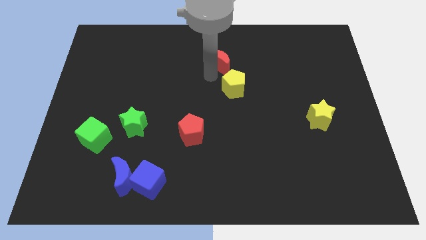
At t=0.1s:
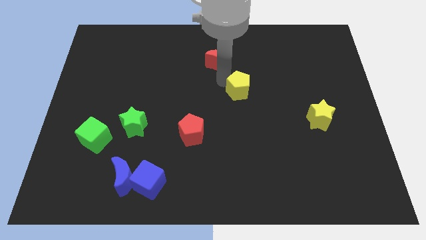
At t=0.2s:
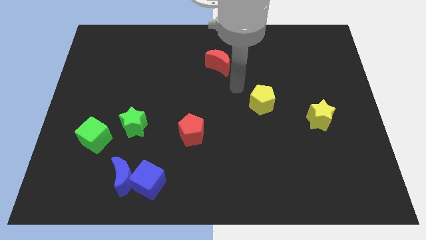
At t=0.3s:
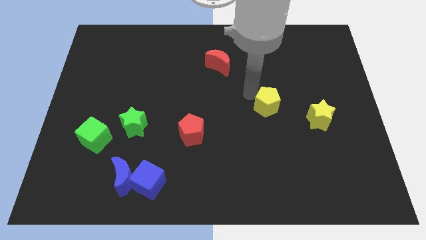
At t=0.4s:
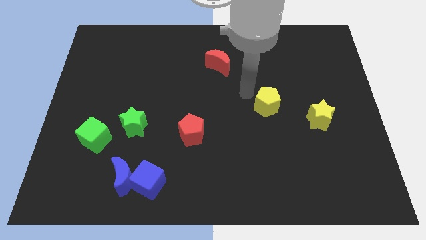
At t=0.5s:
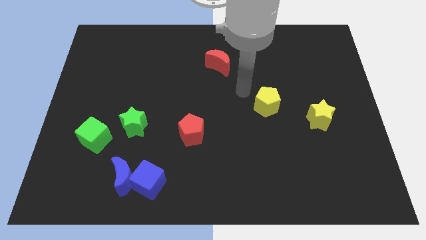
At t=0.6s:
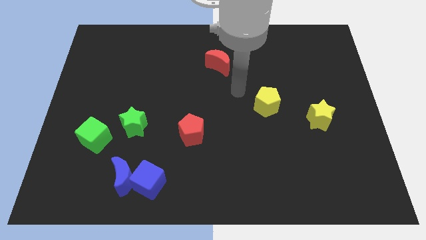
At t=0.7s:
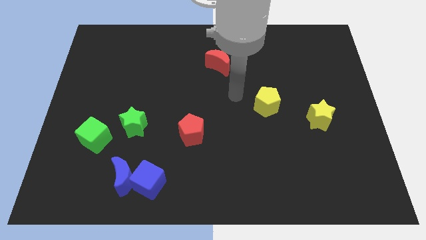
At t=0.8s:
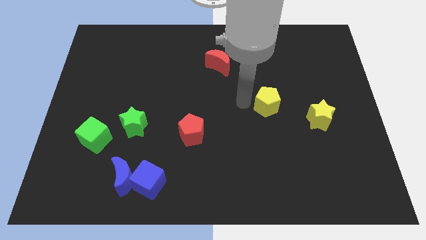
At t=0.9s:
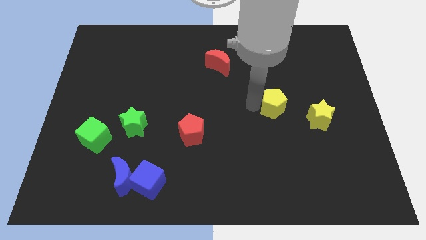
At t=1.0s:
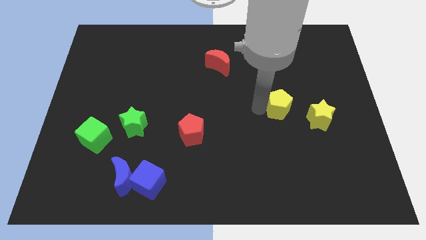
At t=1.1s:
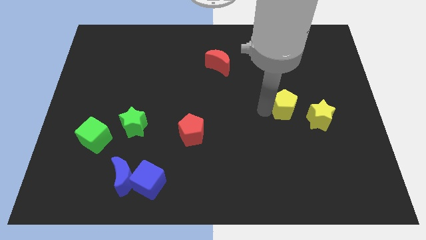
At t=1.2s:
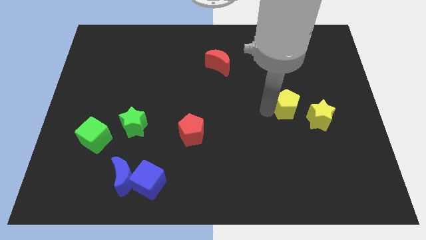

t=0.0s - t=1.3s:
push the yellow pentagon diagonally top right to the yellow star

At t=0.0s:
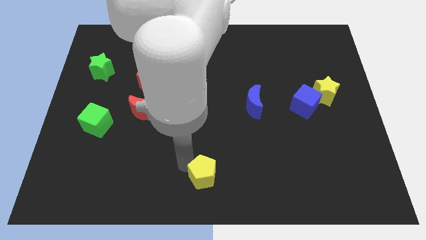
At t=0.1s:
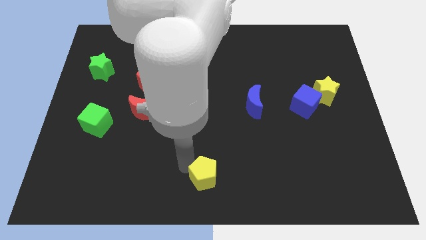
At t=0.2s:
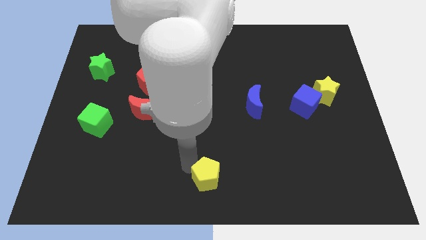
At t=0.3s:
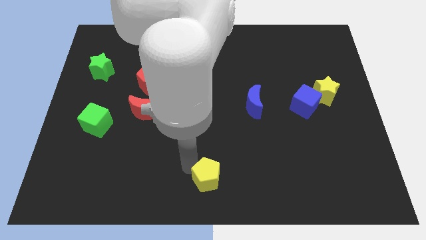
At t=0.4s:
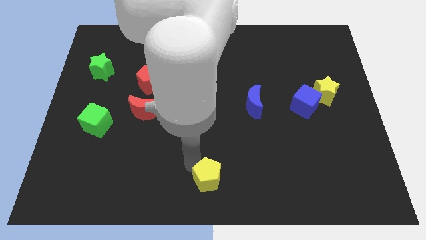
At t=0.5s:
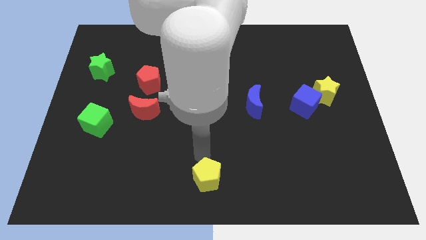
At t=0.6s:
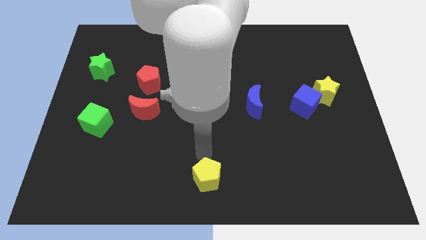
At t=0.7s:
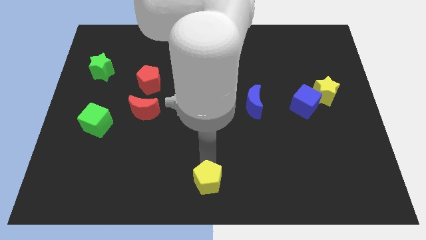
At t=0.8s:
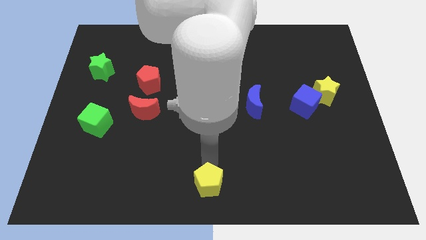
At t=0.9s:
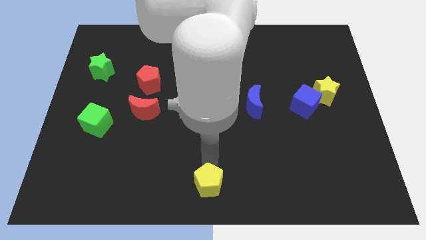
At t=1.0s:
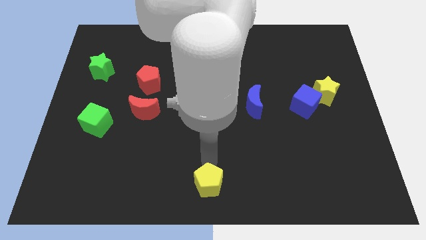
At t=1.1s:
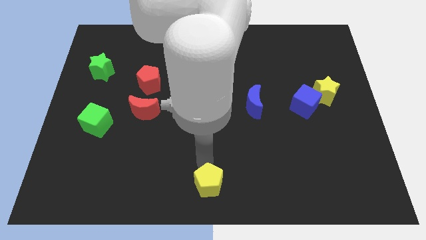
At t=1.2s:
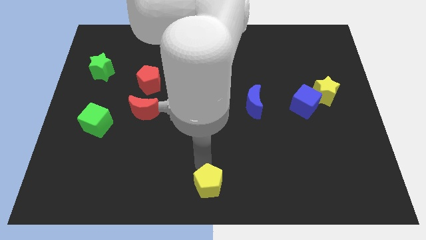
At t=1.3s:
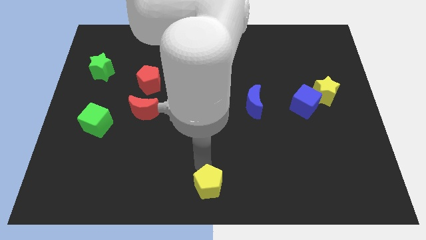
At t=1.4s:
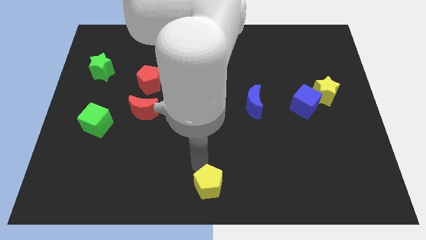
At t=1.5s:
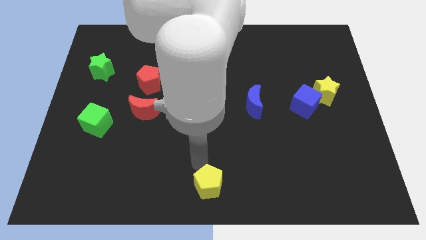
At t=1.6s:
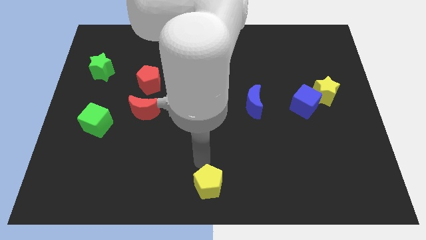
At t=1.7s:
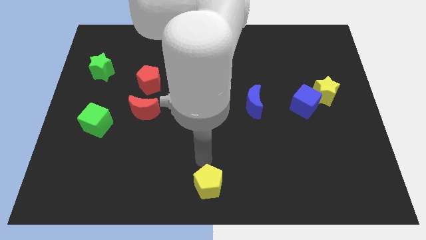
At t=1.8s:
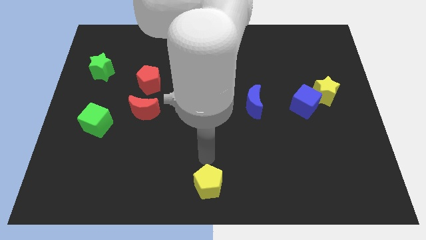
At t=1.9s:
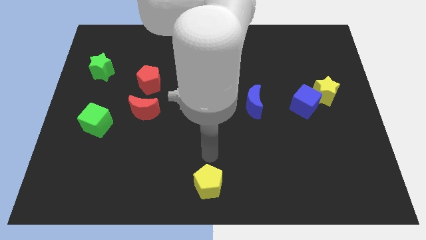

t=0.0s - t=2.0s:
place the yellow pentagon at the bottom centre of the board

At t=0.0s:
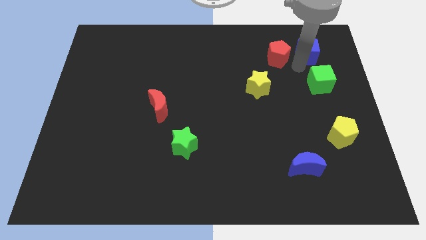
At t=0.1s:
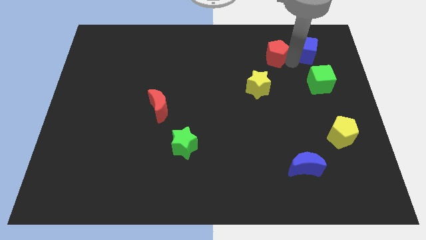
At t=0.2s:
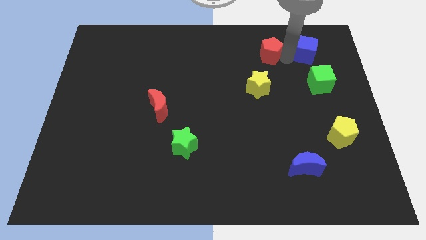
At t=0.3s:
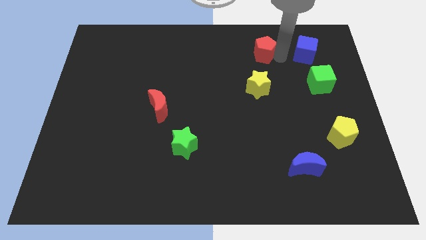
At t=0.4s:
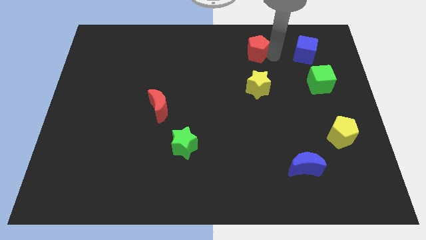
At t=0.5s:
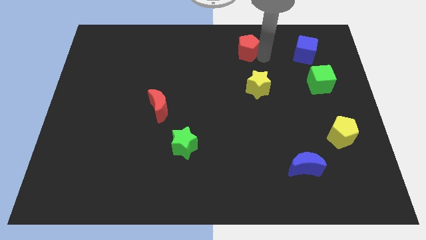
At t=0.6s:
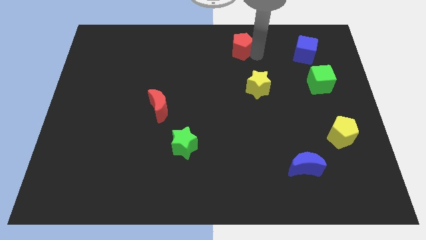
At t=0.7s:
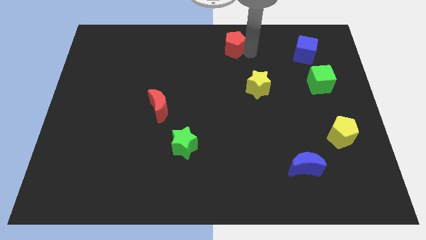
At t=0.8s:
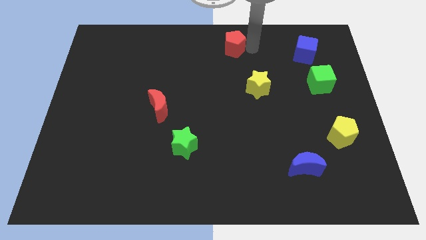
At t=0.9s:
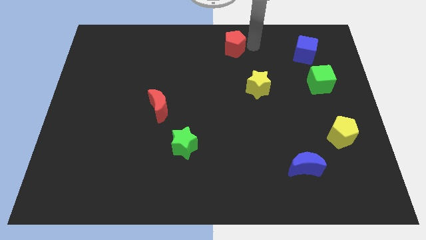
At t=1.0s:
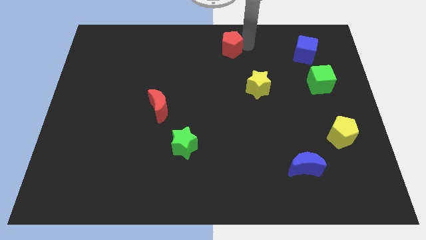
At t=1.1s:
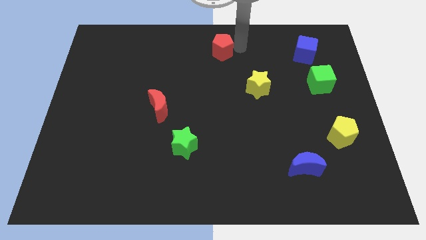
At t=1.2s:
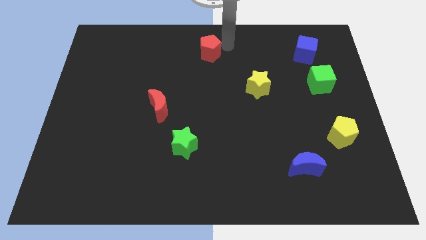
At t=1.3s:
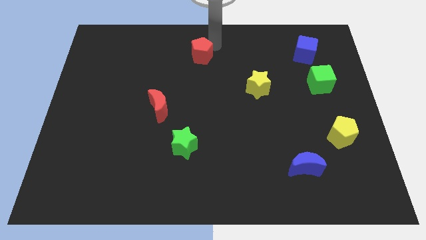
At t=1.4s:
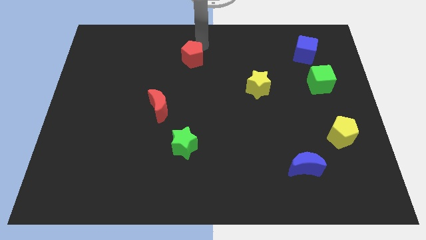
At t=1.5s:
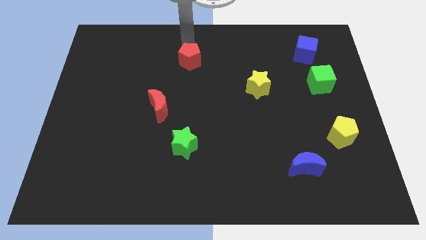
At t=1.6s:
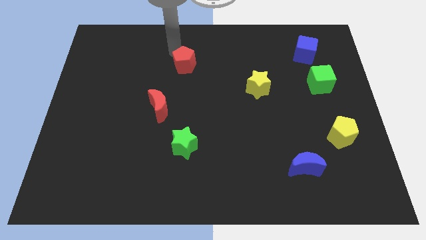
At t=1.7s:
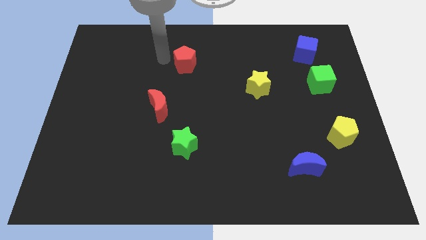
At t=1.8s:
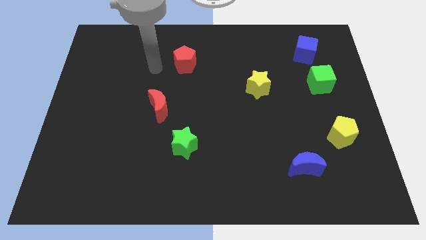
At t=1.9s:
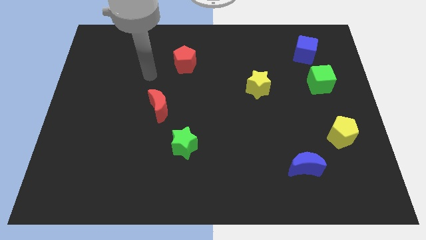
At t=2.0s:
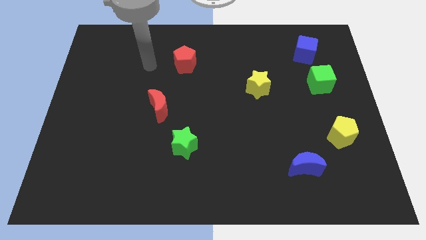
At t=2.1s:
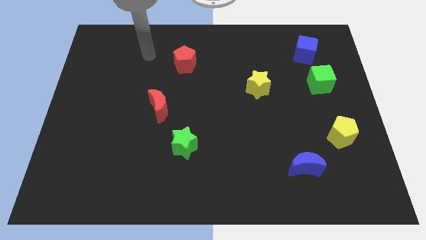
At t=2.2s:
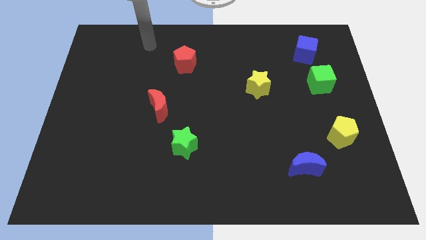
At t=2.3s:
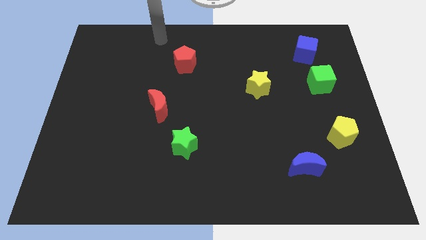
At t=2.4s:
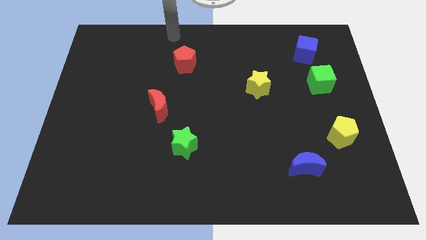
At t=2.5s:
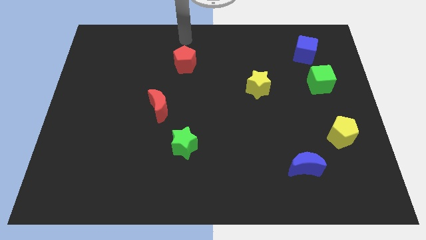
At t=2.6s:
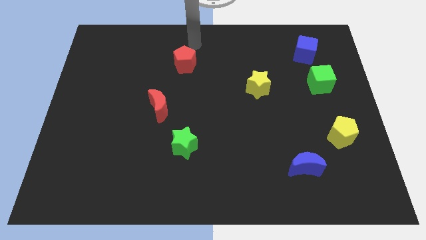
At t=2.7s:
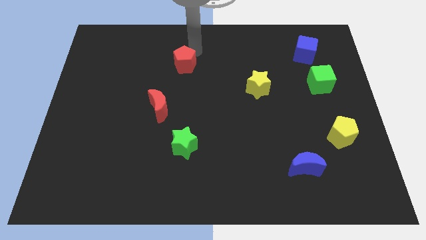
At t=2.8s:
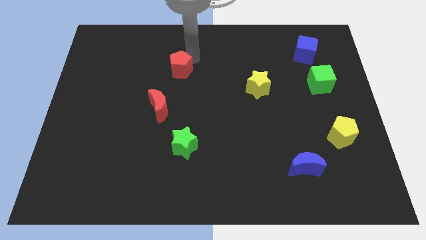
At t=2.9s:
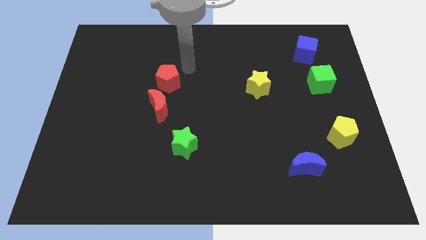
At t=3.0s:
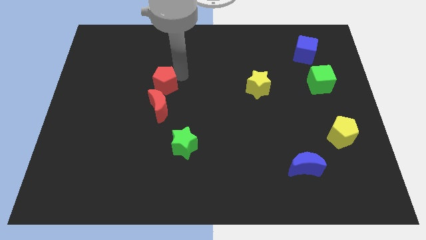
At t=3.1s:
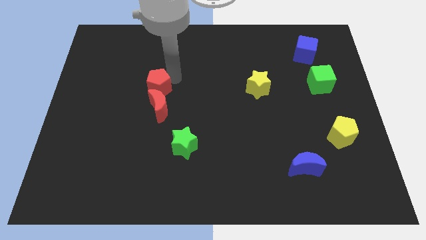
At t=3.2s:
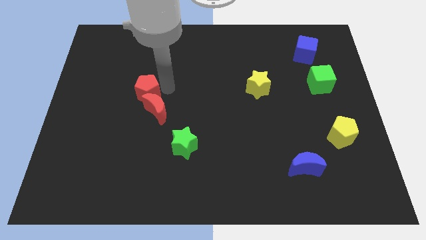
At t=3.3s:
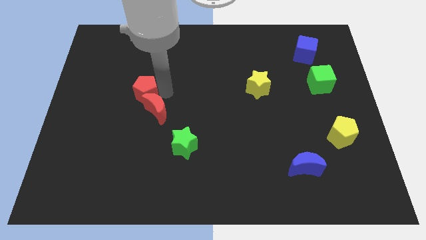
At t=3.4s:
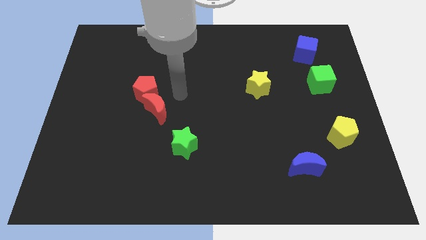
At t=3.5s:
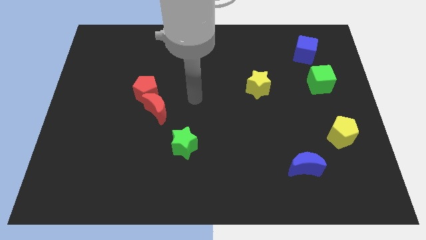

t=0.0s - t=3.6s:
push the red pentagon into the red moon

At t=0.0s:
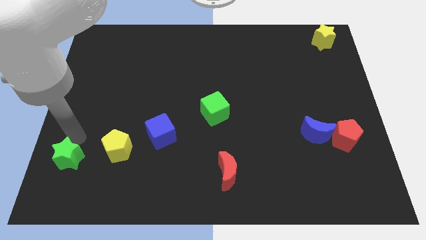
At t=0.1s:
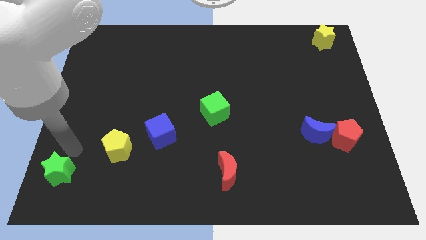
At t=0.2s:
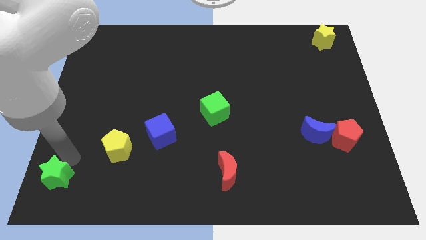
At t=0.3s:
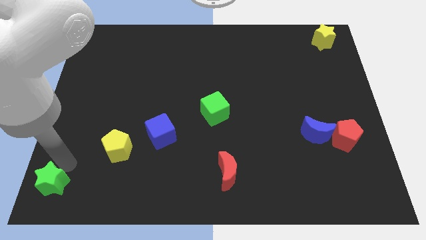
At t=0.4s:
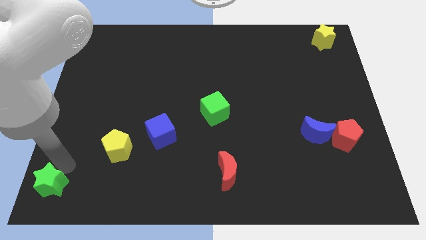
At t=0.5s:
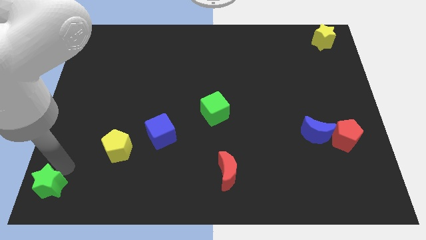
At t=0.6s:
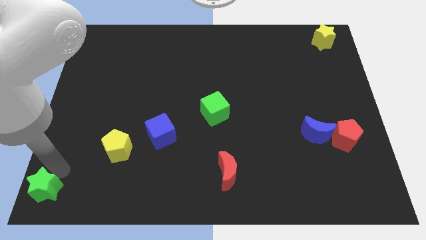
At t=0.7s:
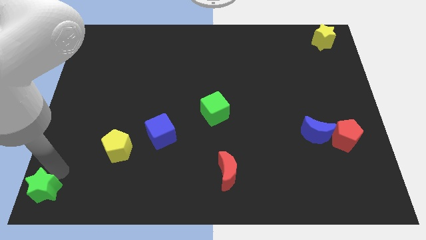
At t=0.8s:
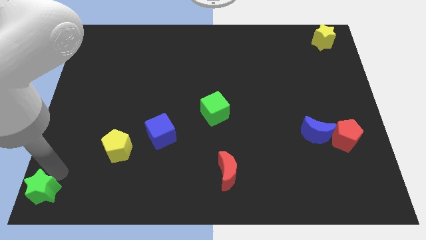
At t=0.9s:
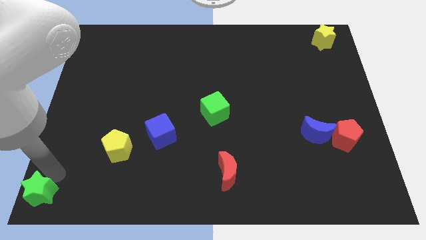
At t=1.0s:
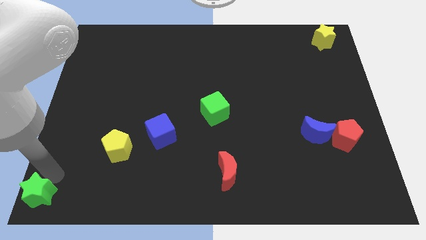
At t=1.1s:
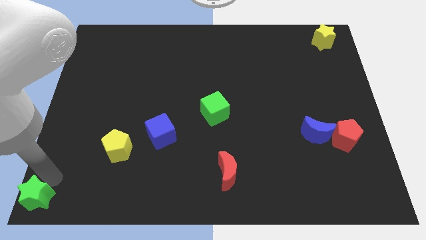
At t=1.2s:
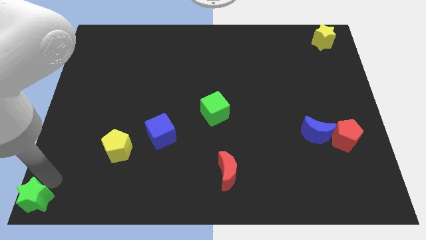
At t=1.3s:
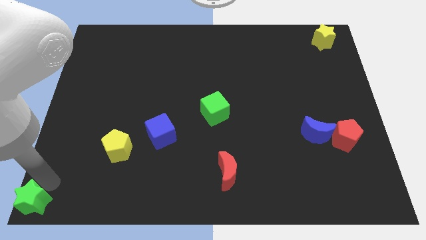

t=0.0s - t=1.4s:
place the green star at the bottom left corner

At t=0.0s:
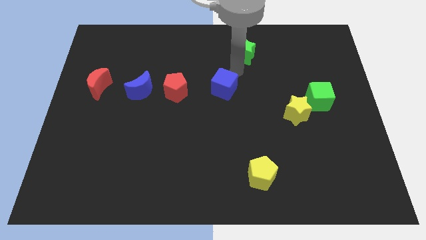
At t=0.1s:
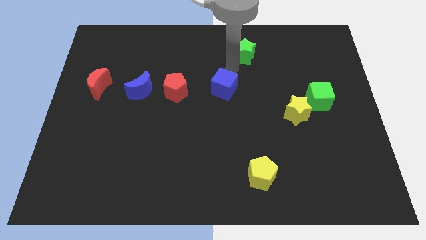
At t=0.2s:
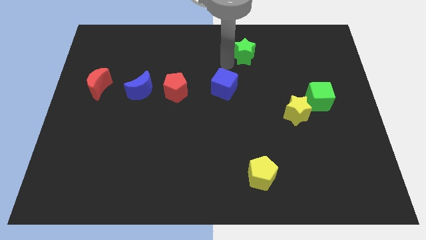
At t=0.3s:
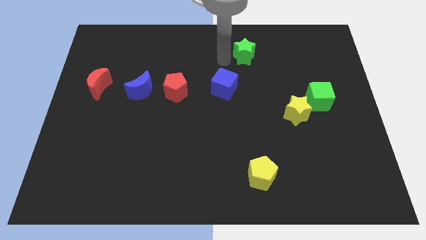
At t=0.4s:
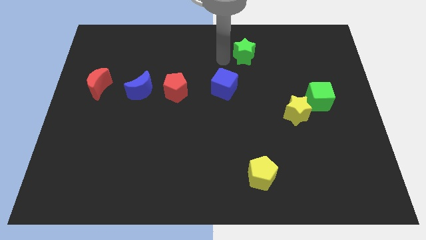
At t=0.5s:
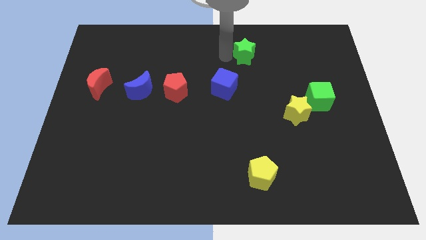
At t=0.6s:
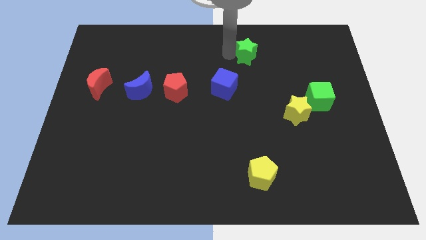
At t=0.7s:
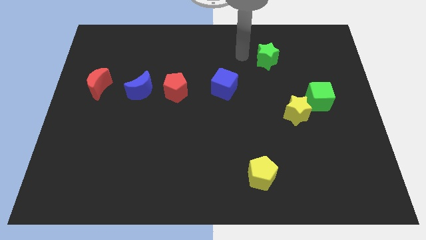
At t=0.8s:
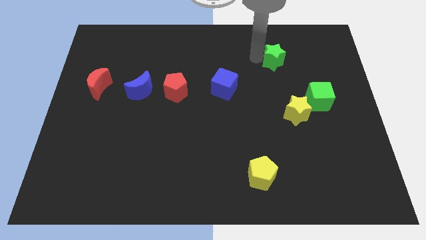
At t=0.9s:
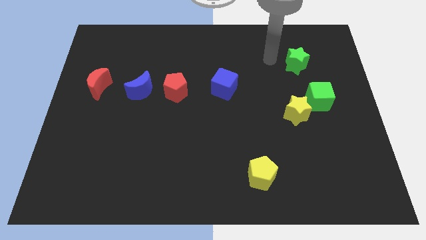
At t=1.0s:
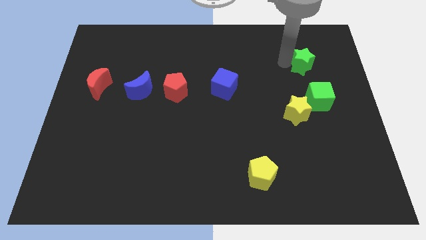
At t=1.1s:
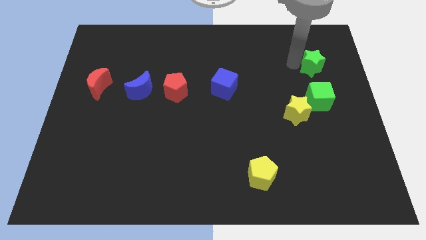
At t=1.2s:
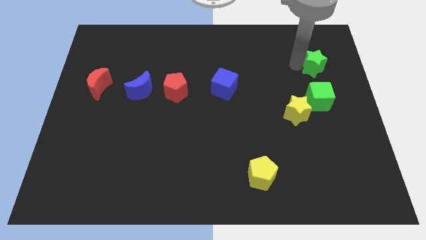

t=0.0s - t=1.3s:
push the green star to the center right
